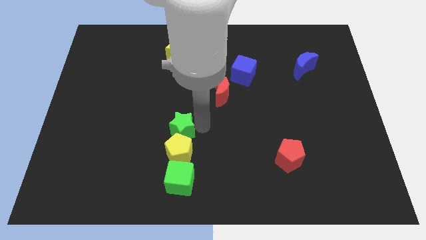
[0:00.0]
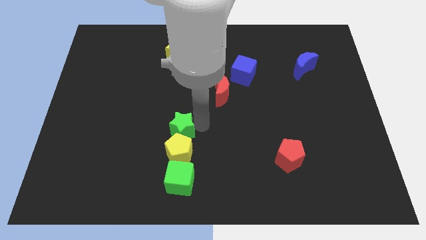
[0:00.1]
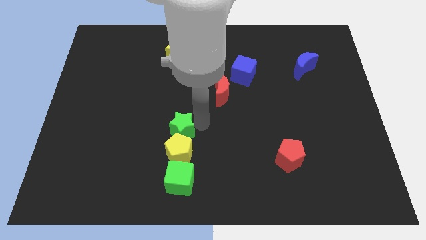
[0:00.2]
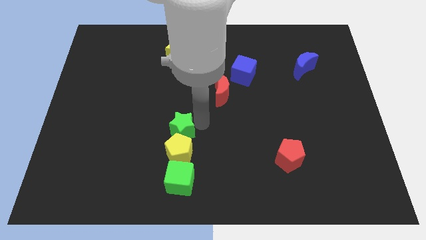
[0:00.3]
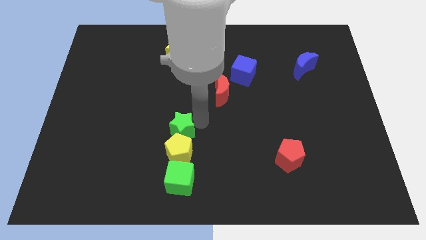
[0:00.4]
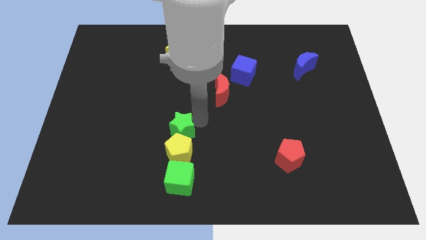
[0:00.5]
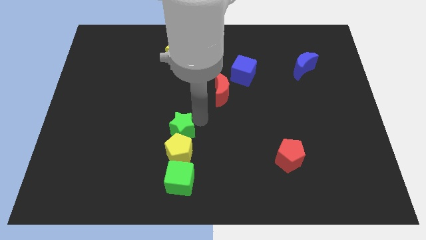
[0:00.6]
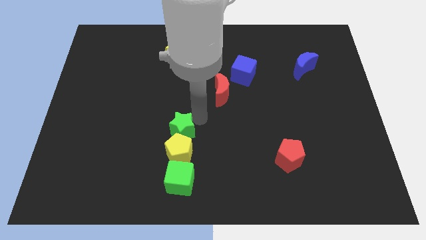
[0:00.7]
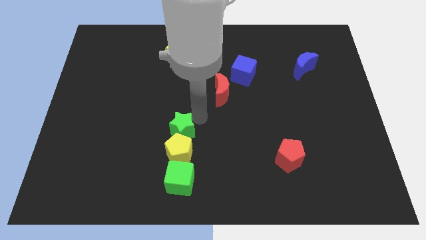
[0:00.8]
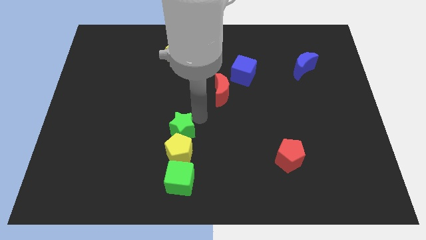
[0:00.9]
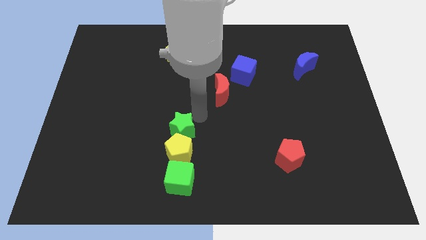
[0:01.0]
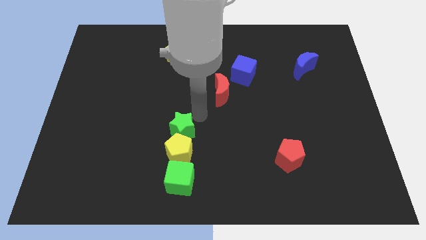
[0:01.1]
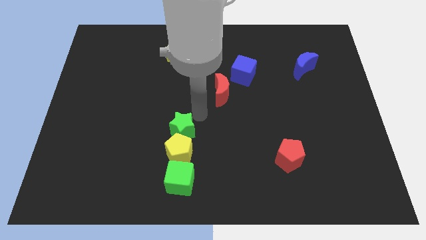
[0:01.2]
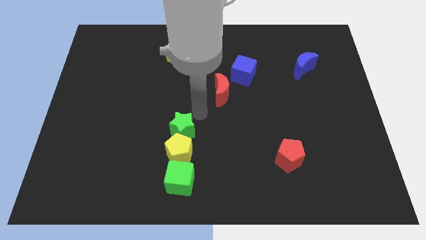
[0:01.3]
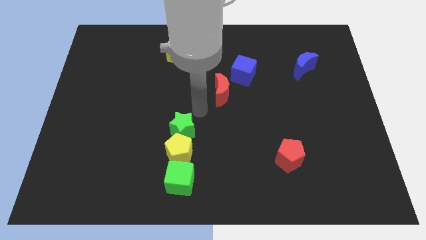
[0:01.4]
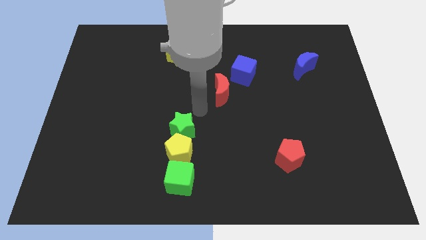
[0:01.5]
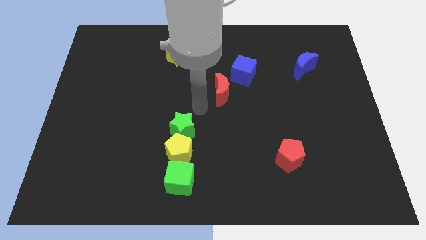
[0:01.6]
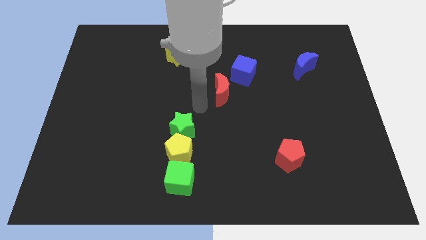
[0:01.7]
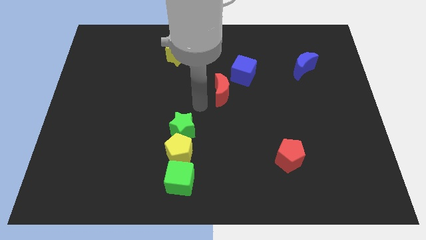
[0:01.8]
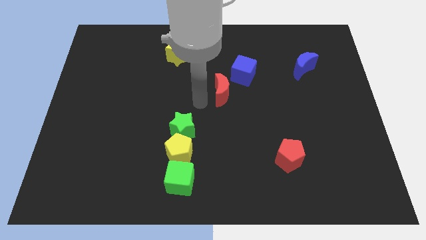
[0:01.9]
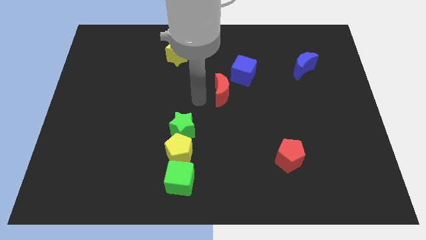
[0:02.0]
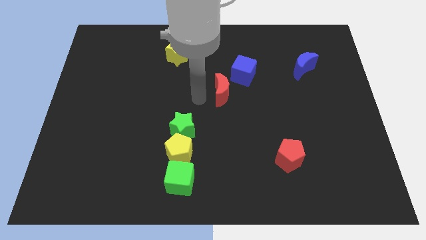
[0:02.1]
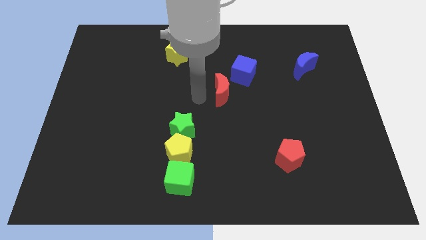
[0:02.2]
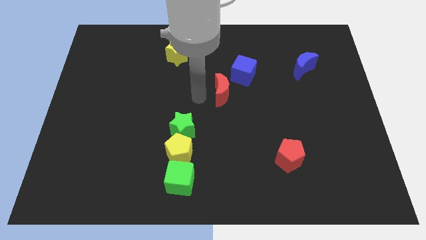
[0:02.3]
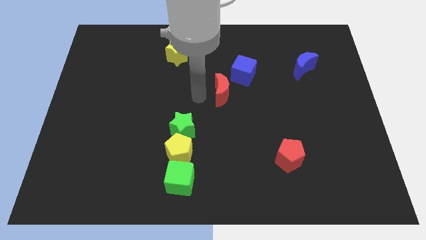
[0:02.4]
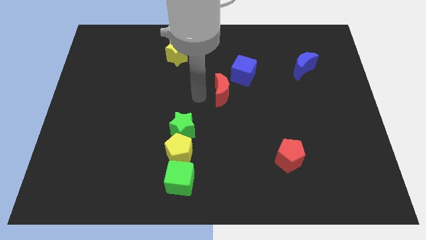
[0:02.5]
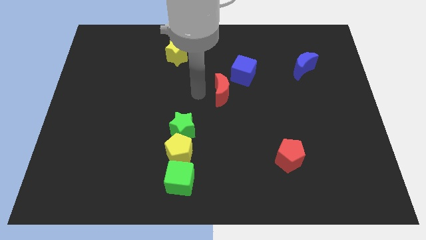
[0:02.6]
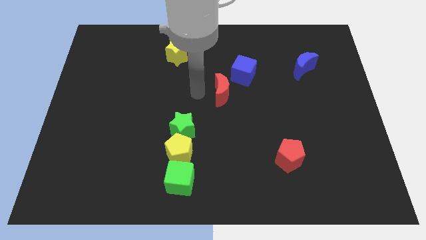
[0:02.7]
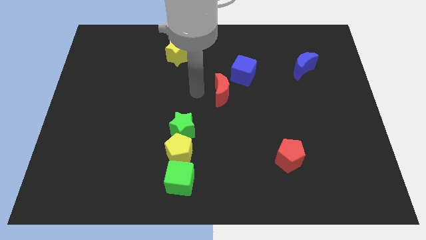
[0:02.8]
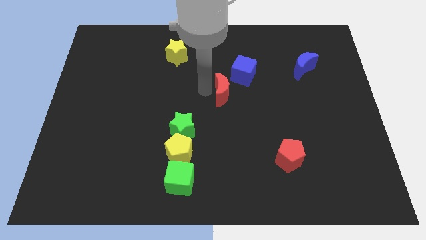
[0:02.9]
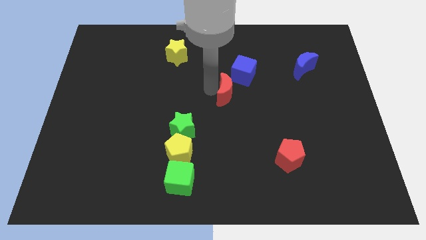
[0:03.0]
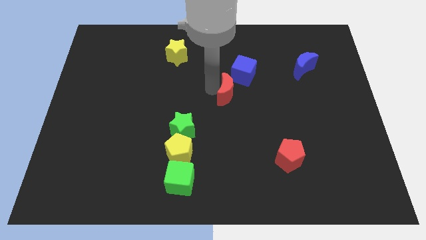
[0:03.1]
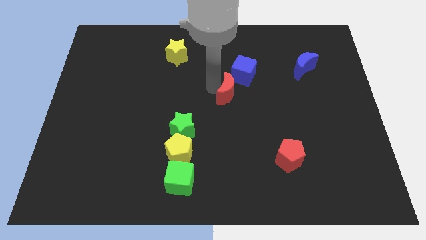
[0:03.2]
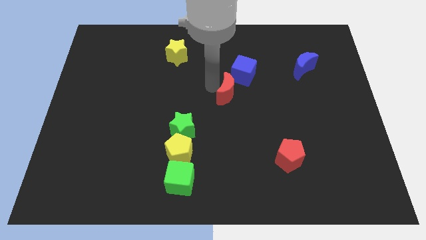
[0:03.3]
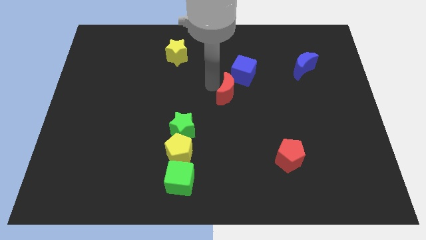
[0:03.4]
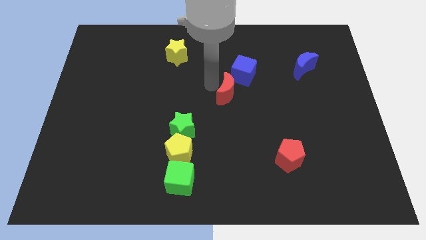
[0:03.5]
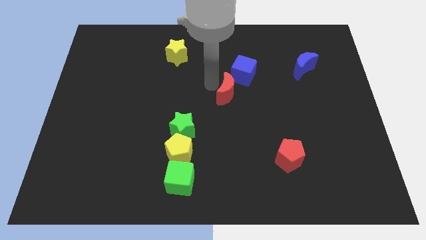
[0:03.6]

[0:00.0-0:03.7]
move the red crescent slightly to the right

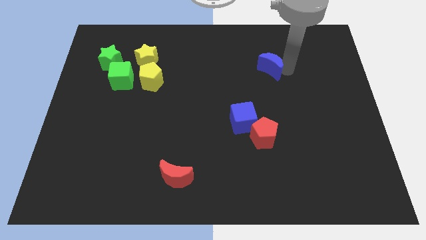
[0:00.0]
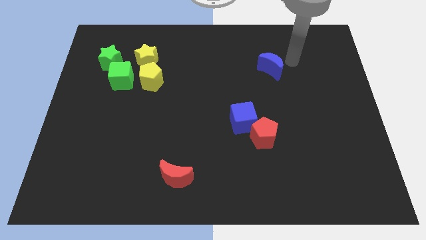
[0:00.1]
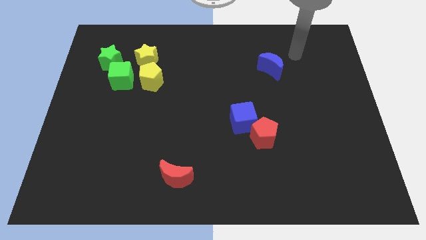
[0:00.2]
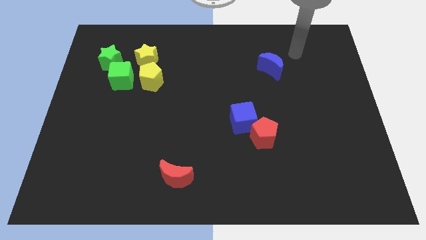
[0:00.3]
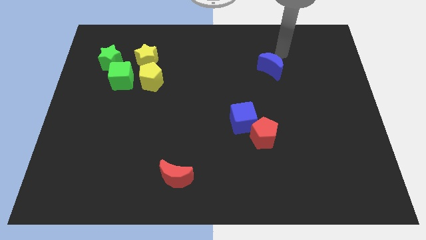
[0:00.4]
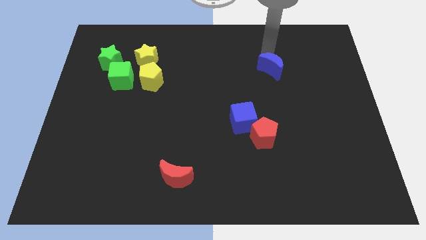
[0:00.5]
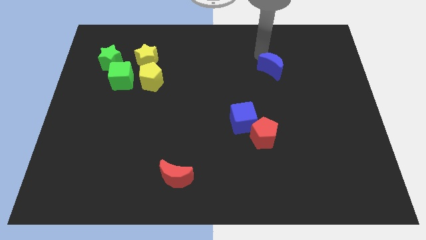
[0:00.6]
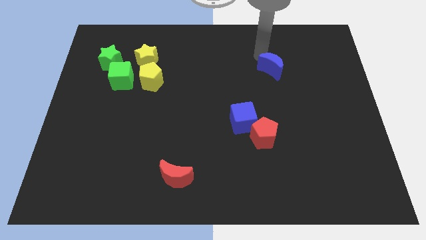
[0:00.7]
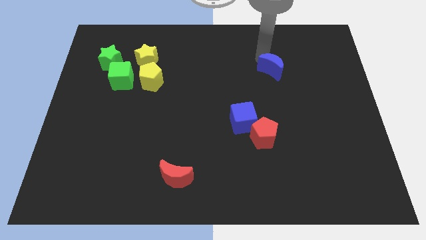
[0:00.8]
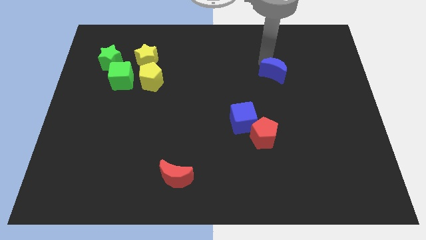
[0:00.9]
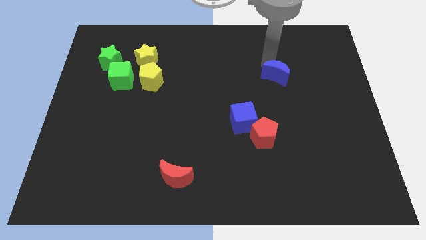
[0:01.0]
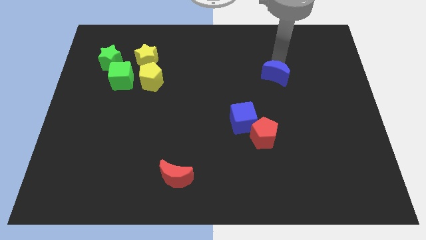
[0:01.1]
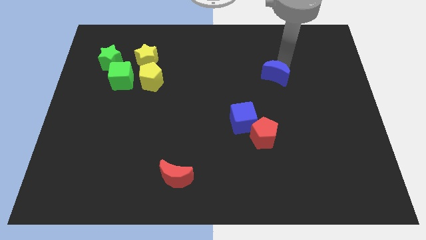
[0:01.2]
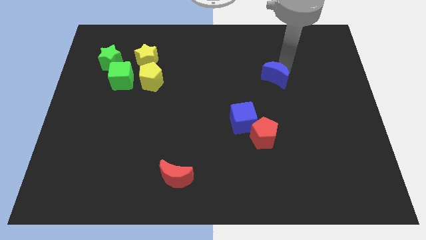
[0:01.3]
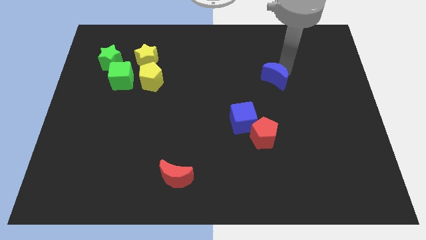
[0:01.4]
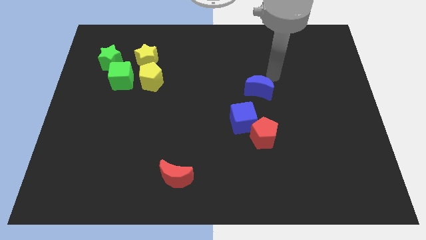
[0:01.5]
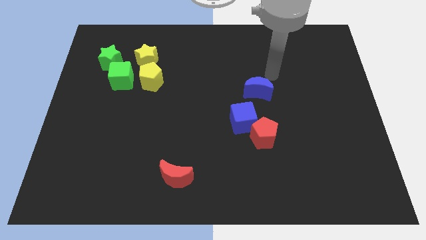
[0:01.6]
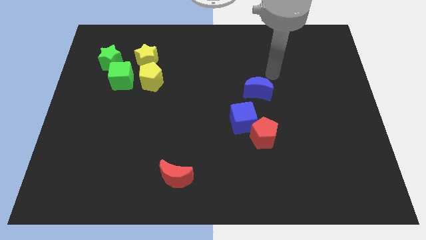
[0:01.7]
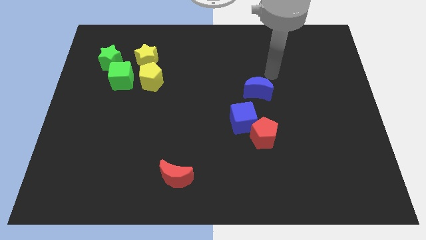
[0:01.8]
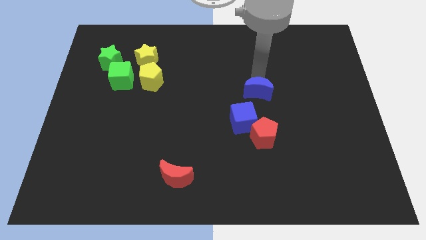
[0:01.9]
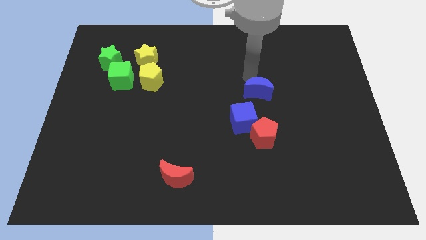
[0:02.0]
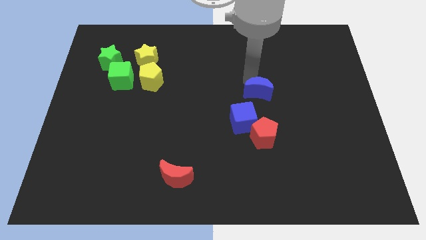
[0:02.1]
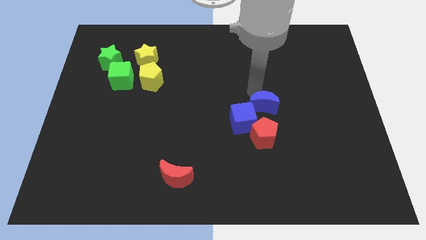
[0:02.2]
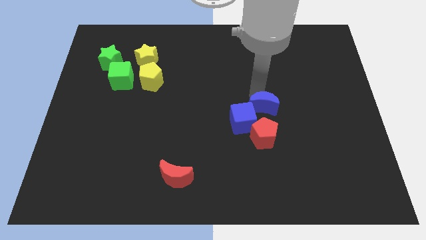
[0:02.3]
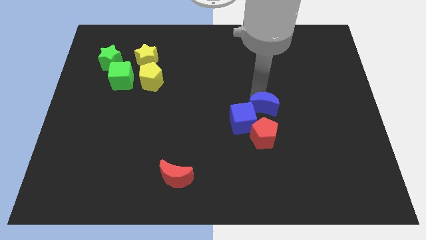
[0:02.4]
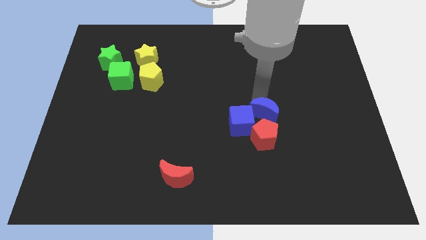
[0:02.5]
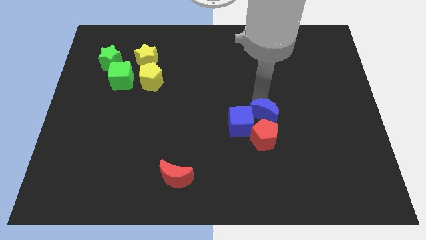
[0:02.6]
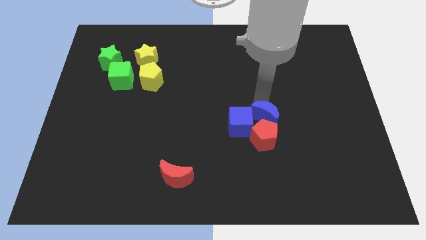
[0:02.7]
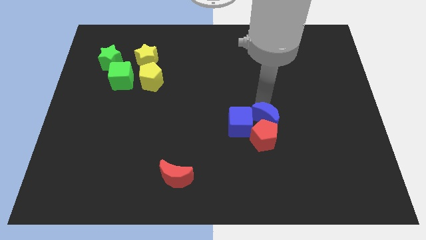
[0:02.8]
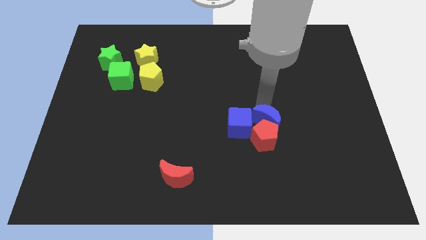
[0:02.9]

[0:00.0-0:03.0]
push blue crescent into the red pentagon

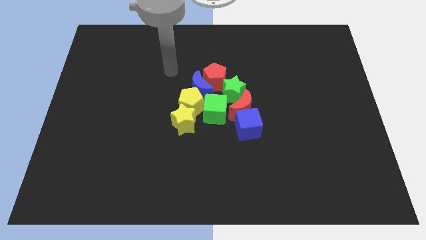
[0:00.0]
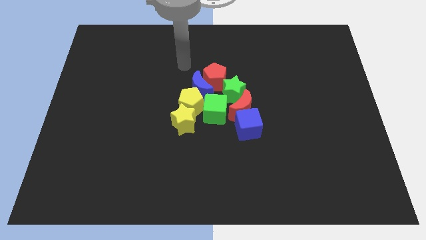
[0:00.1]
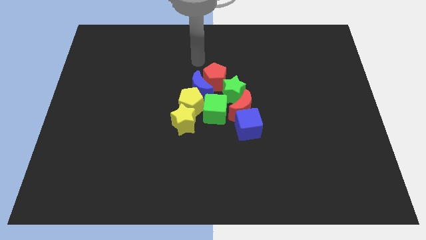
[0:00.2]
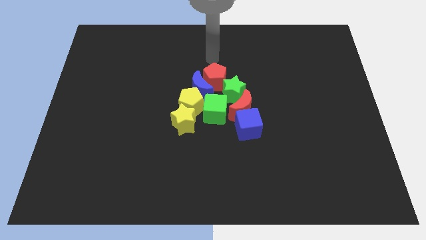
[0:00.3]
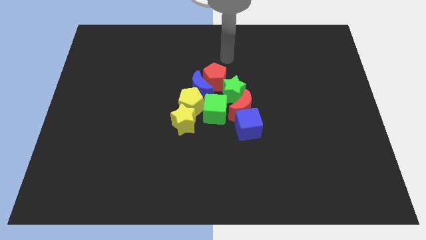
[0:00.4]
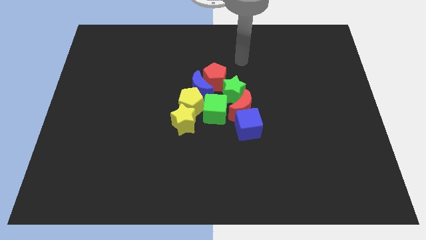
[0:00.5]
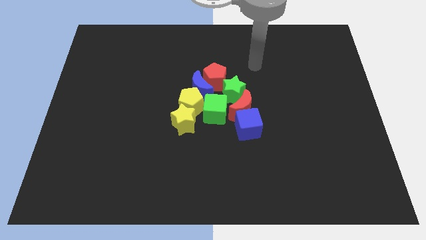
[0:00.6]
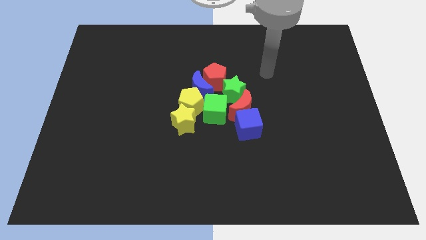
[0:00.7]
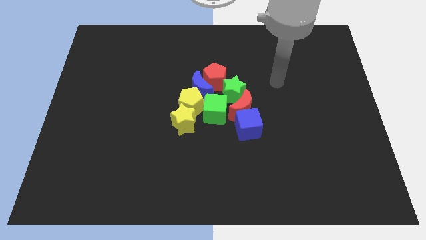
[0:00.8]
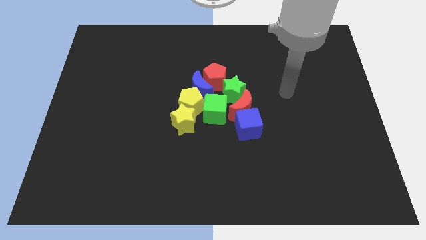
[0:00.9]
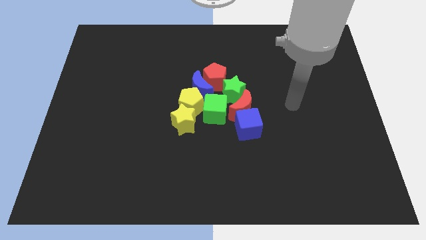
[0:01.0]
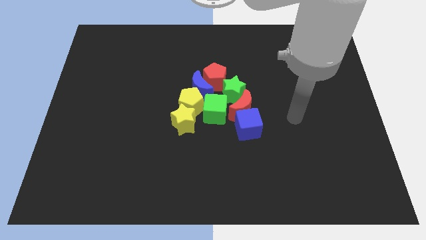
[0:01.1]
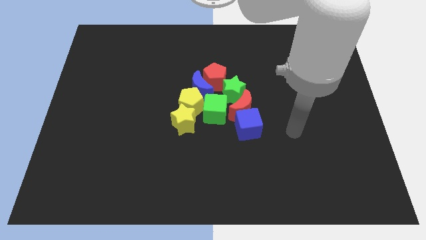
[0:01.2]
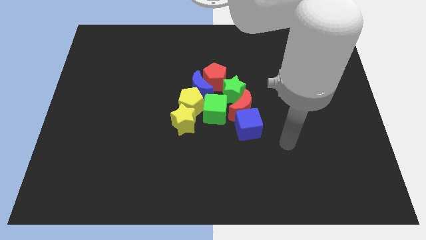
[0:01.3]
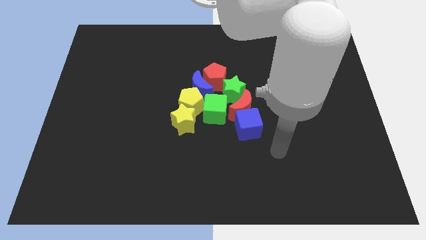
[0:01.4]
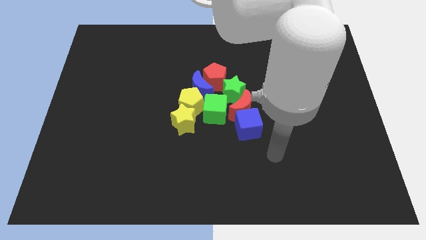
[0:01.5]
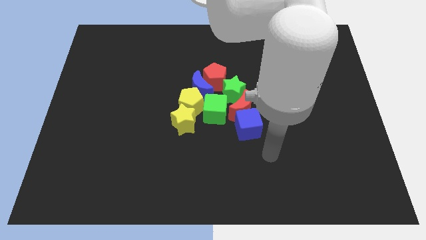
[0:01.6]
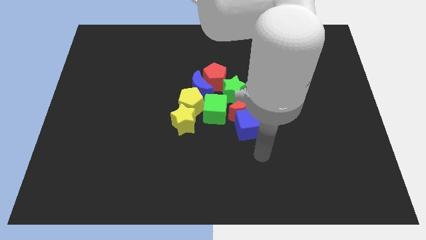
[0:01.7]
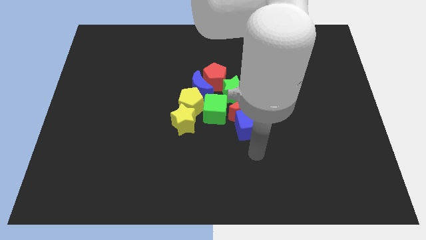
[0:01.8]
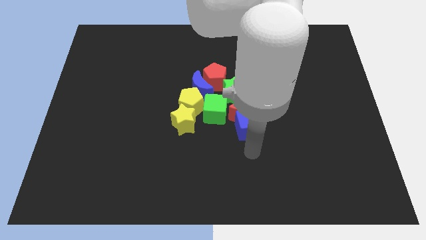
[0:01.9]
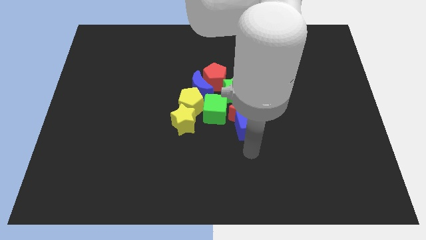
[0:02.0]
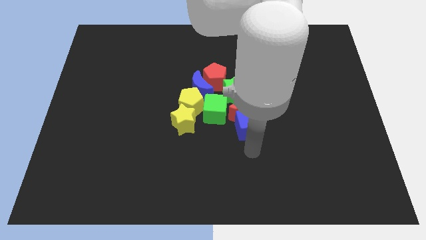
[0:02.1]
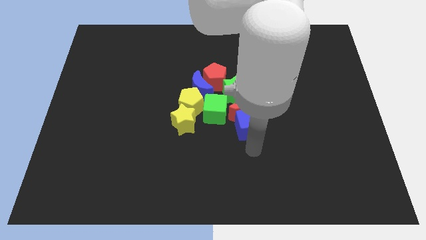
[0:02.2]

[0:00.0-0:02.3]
place your hand under the blue cube
